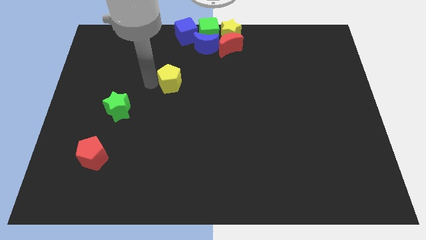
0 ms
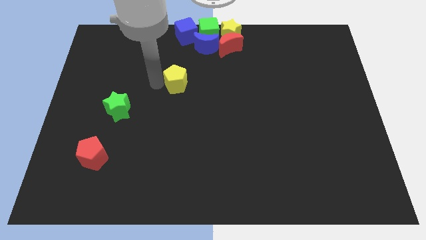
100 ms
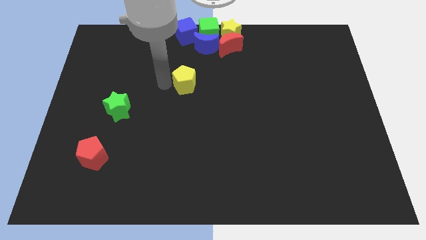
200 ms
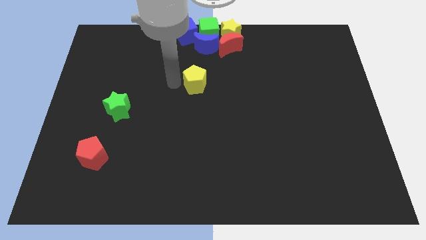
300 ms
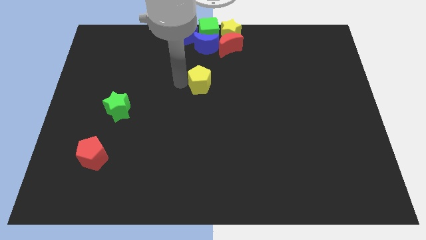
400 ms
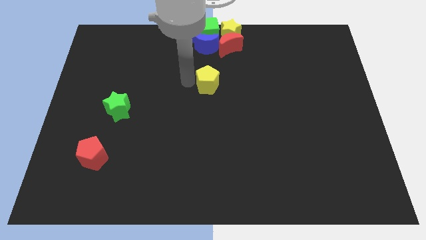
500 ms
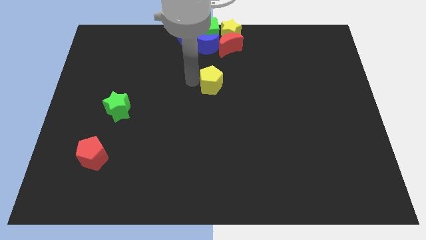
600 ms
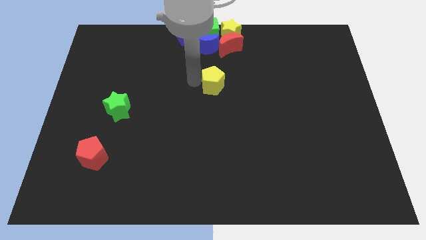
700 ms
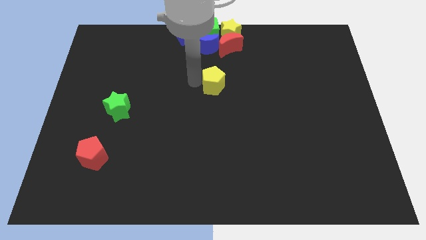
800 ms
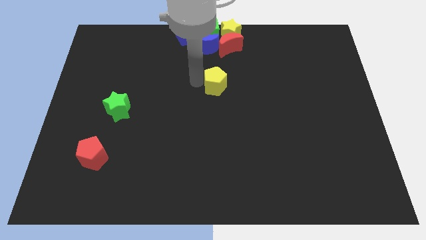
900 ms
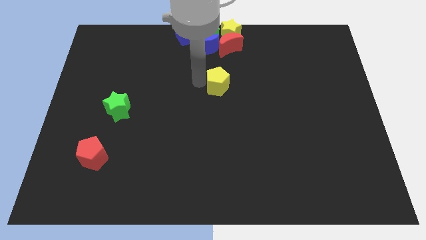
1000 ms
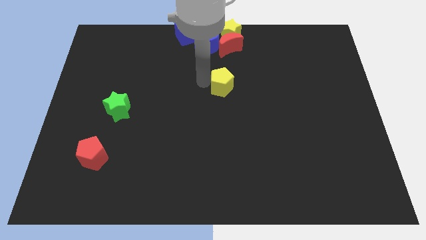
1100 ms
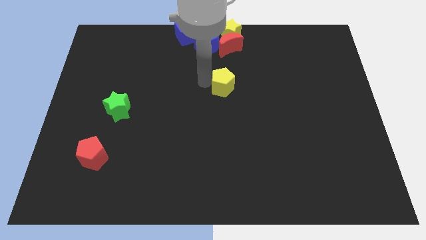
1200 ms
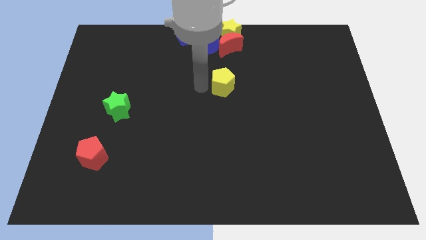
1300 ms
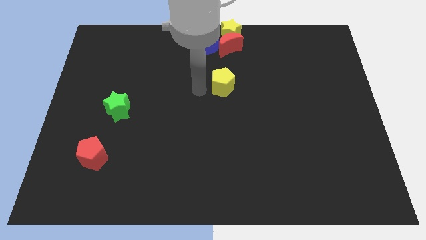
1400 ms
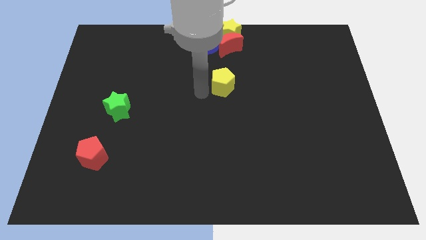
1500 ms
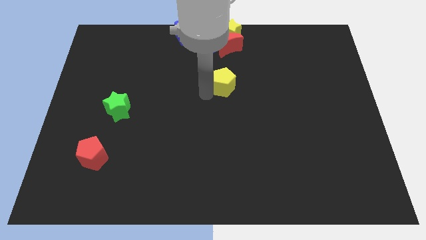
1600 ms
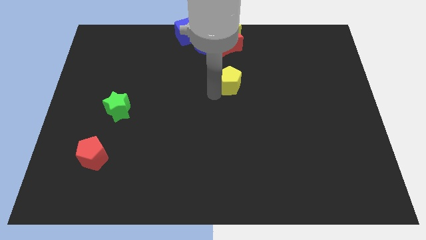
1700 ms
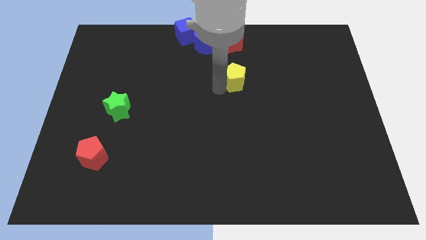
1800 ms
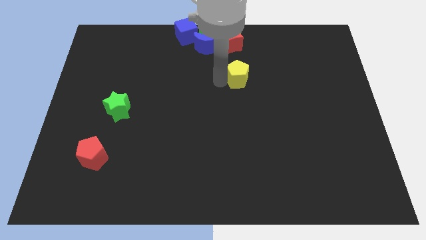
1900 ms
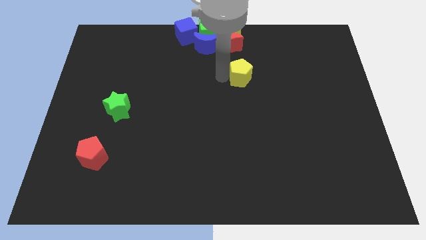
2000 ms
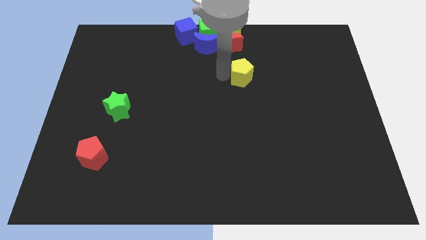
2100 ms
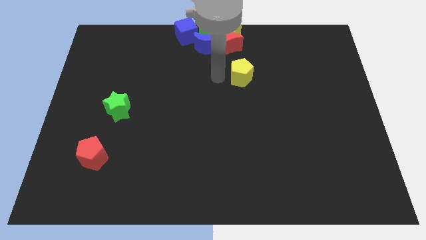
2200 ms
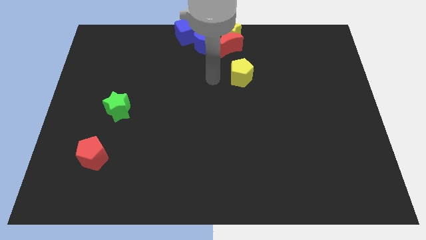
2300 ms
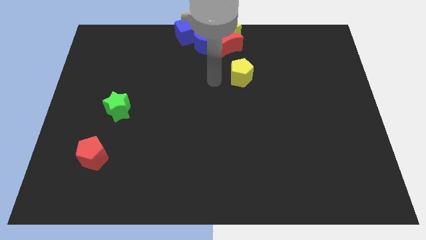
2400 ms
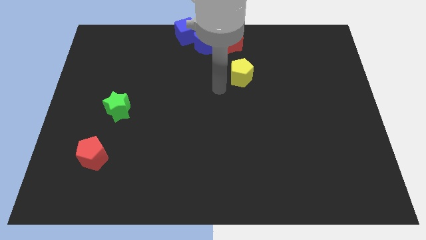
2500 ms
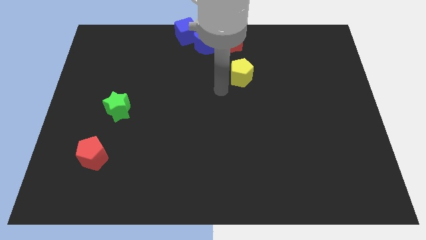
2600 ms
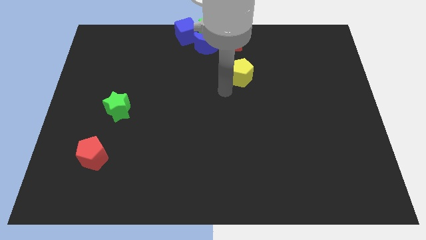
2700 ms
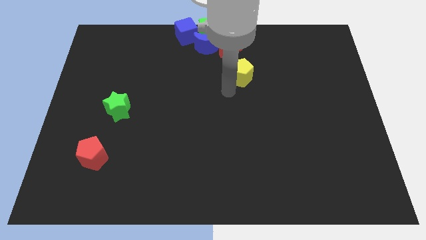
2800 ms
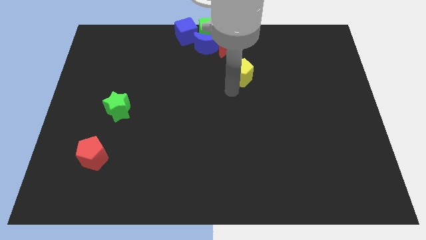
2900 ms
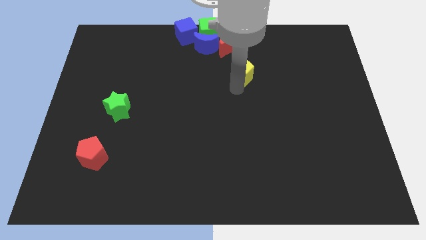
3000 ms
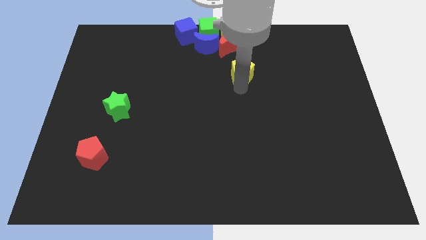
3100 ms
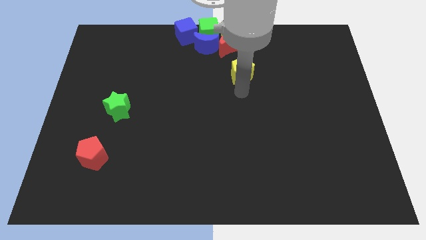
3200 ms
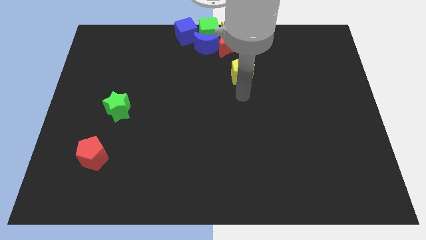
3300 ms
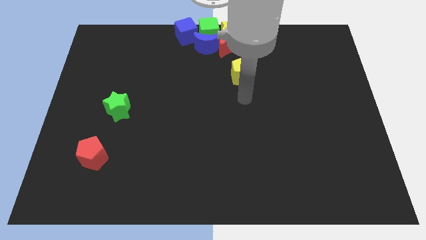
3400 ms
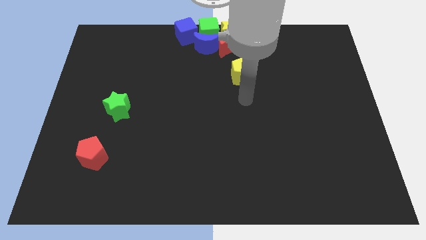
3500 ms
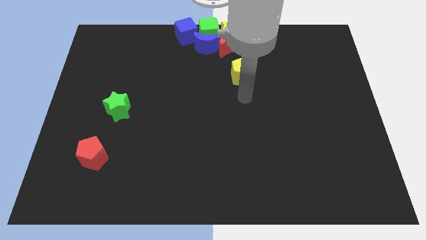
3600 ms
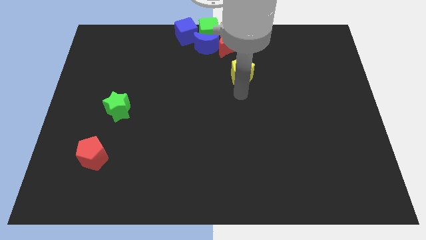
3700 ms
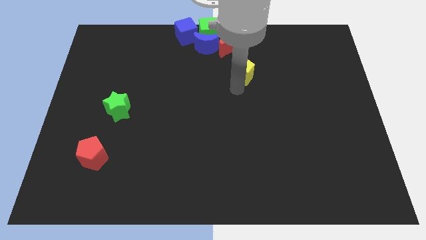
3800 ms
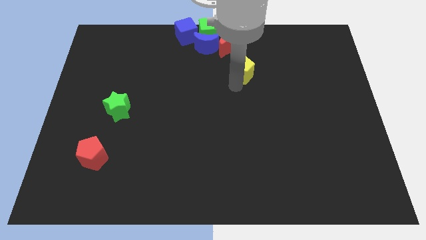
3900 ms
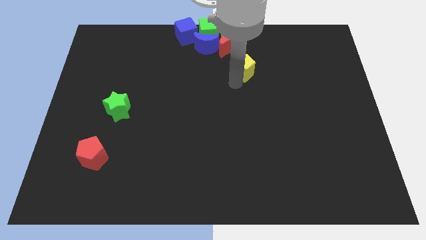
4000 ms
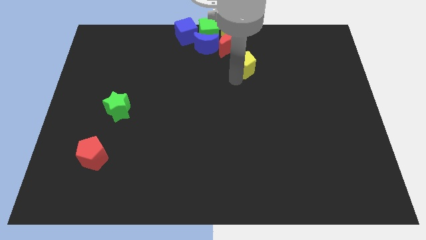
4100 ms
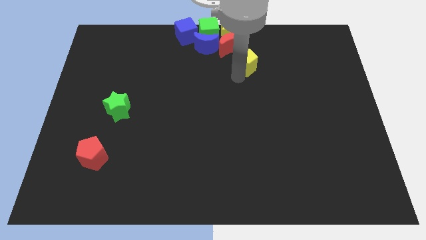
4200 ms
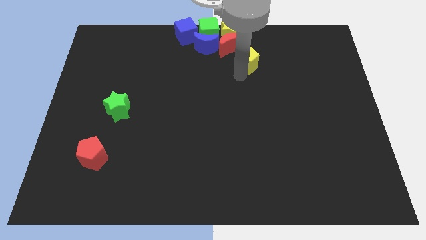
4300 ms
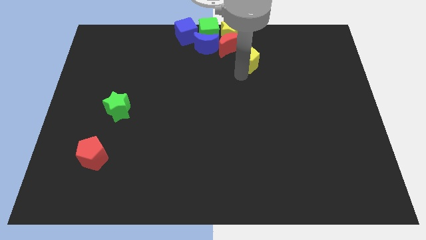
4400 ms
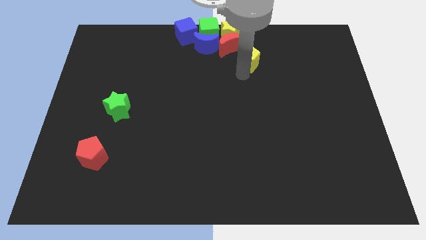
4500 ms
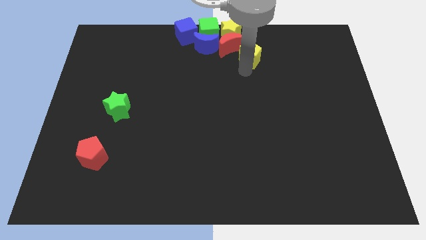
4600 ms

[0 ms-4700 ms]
drag the yellow pentagon to bottom right of red crescent

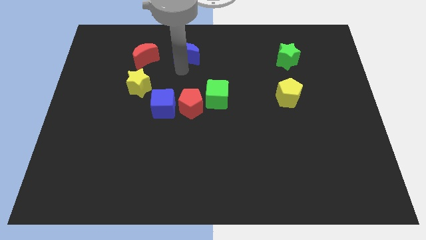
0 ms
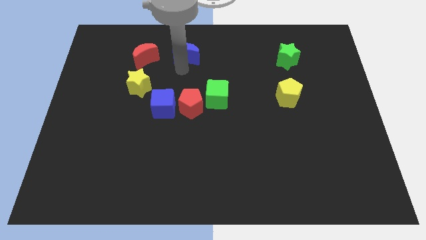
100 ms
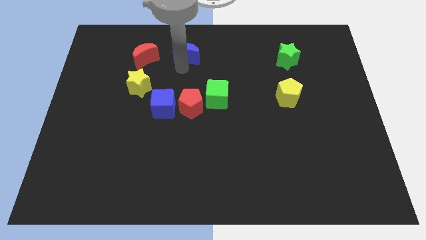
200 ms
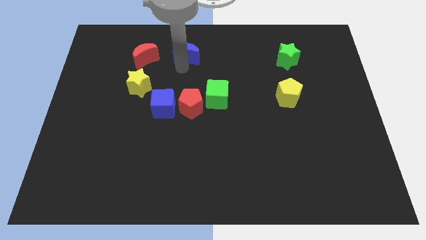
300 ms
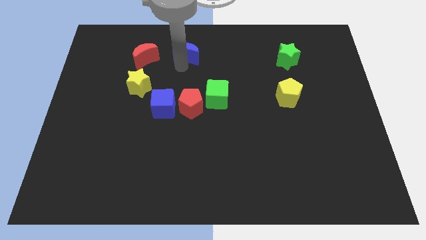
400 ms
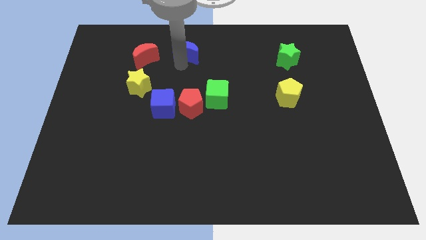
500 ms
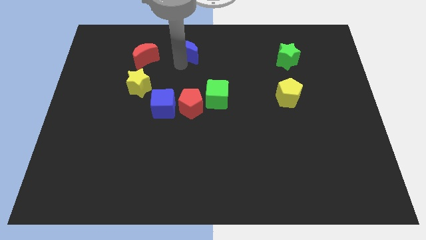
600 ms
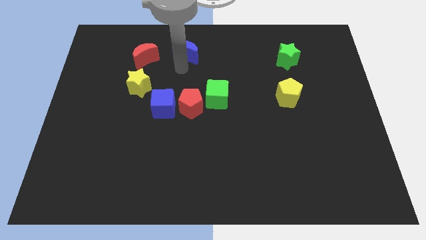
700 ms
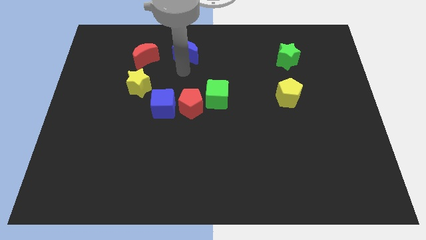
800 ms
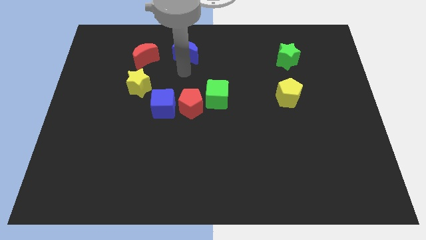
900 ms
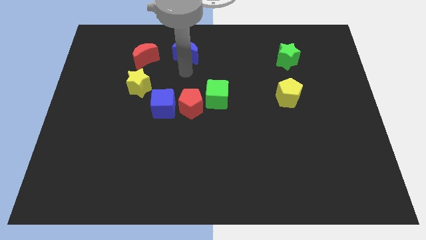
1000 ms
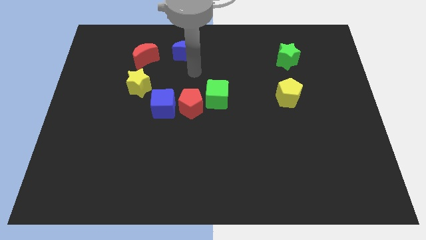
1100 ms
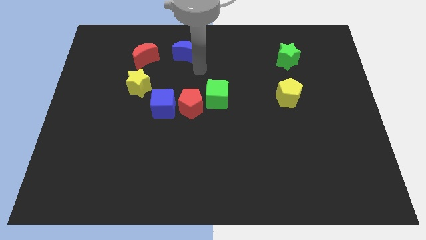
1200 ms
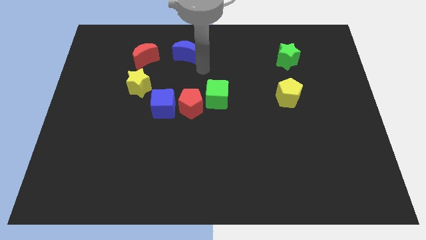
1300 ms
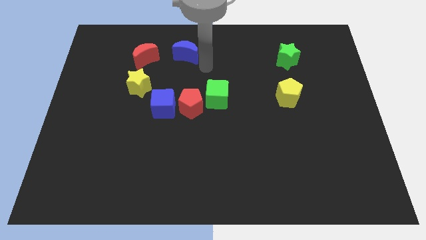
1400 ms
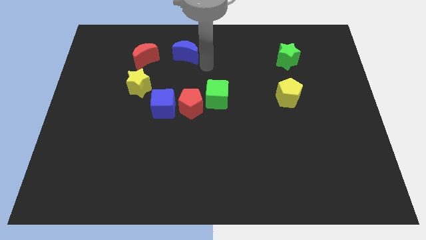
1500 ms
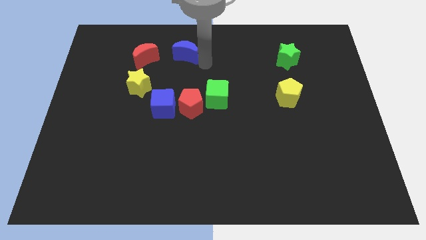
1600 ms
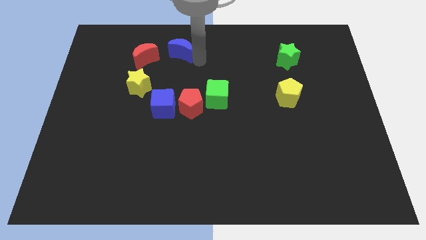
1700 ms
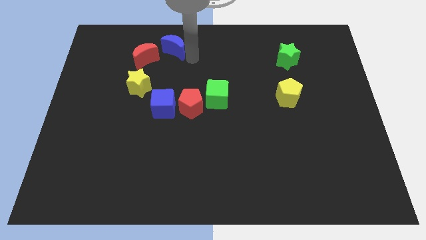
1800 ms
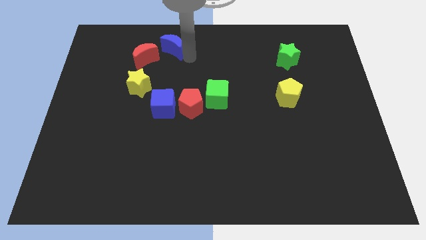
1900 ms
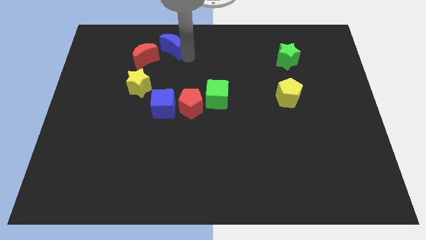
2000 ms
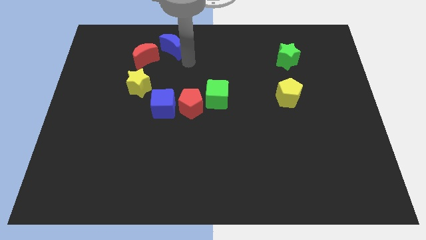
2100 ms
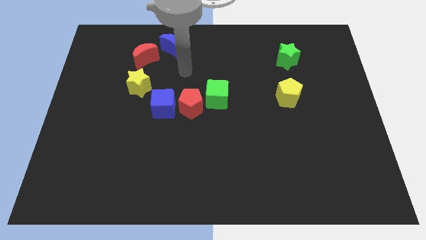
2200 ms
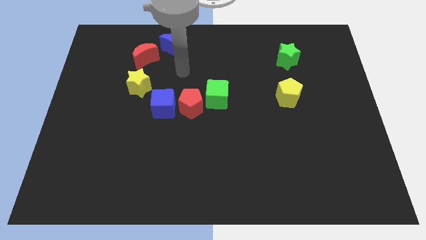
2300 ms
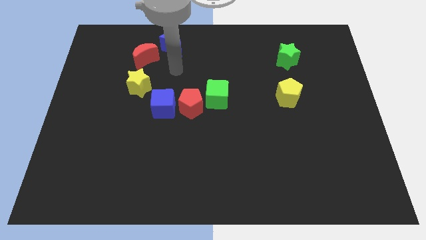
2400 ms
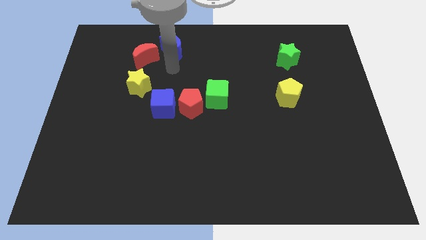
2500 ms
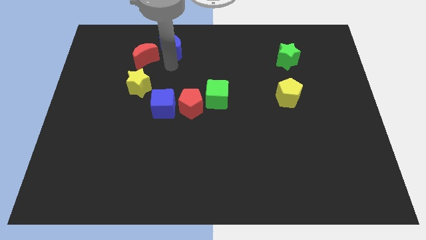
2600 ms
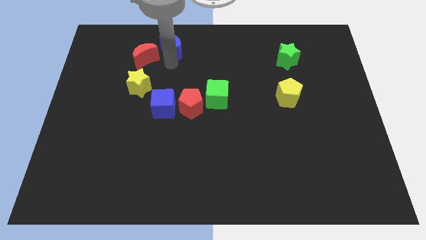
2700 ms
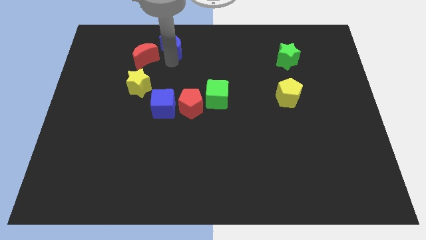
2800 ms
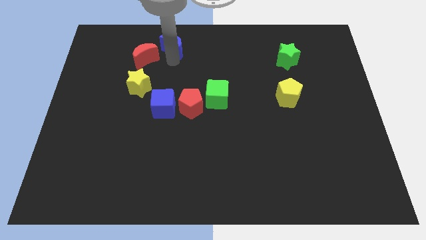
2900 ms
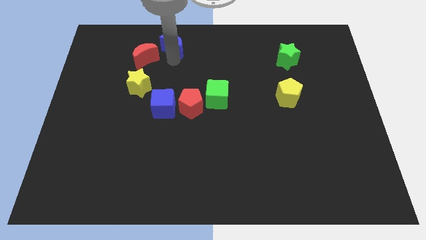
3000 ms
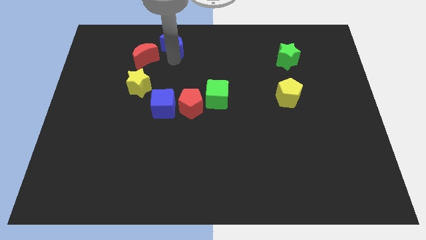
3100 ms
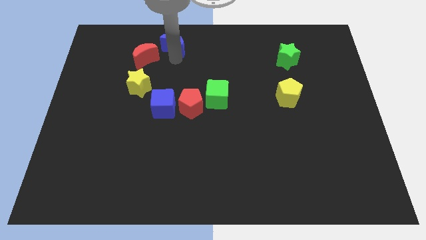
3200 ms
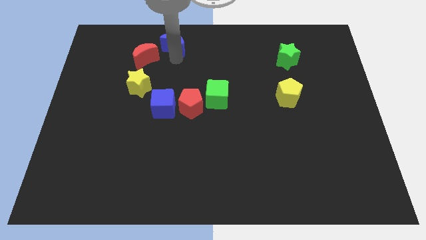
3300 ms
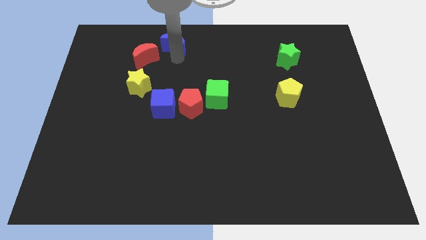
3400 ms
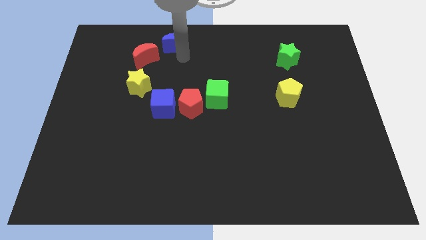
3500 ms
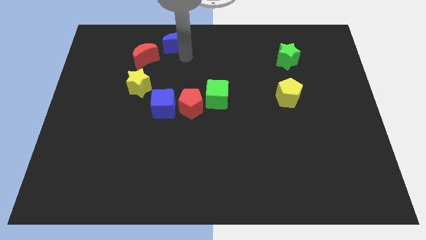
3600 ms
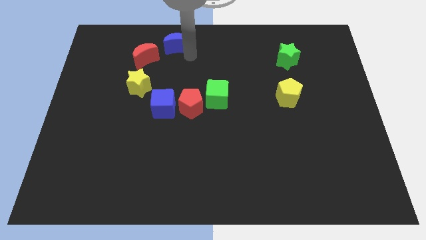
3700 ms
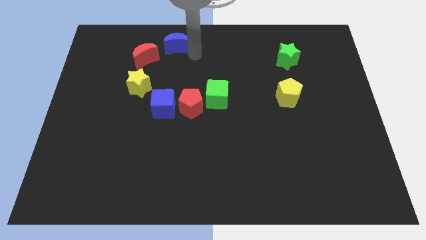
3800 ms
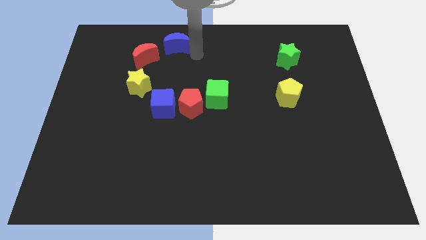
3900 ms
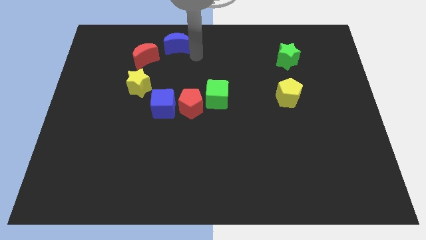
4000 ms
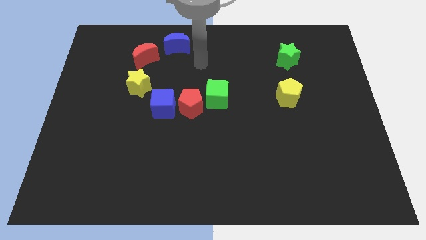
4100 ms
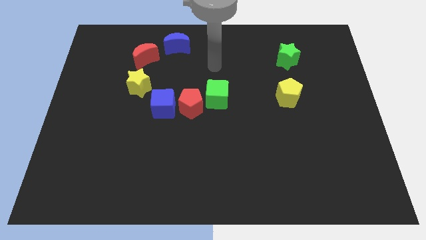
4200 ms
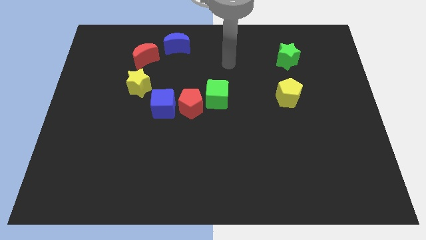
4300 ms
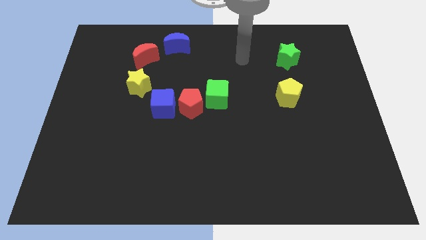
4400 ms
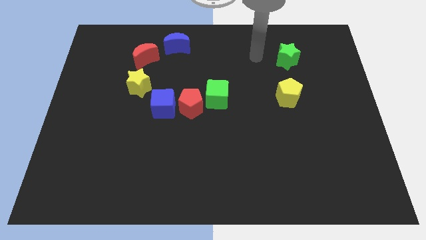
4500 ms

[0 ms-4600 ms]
place the blue moon to the top right of red moon
